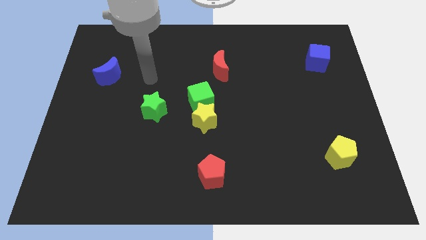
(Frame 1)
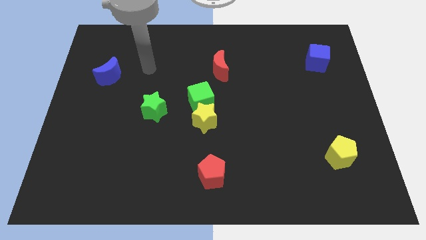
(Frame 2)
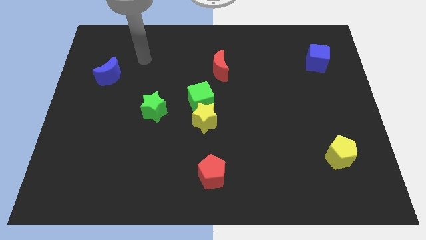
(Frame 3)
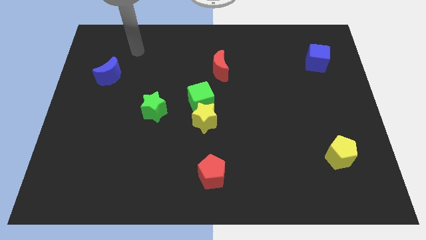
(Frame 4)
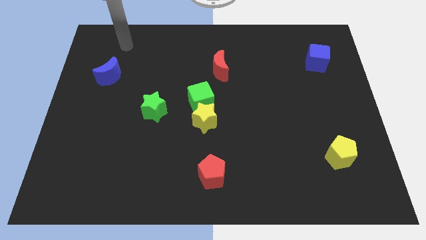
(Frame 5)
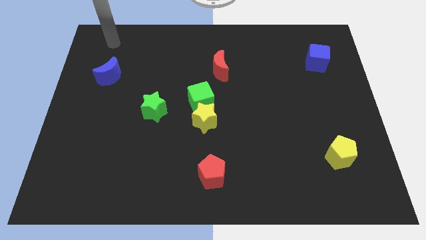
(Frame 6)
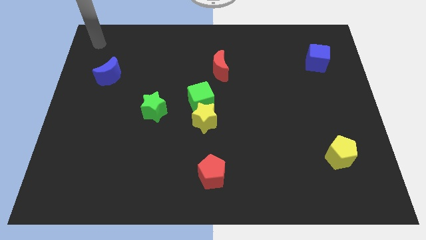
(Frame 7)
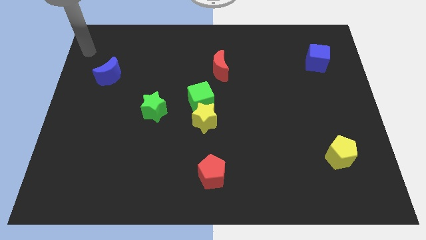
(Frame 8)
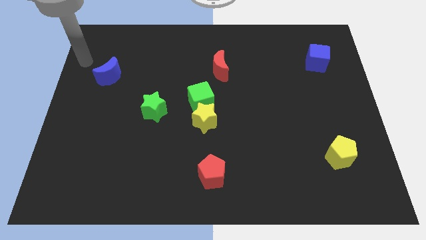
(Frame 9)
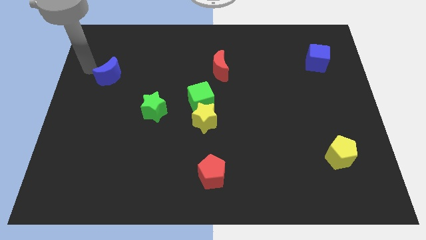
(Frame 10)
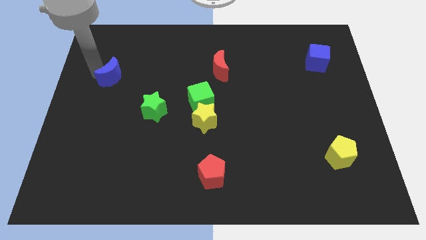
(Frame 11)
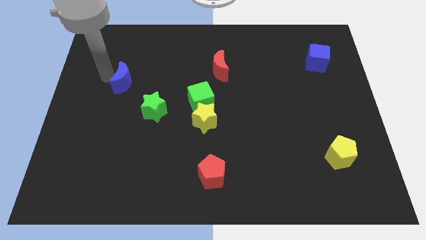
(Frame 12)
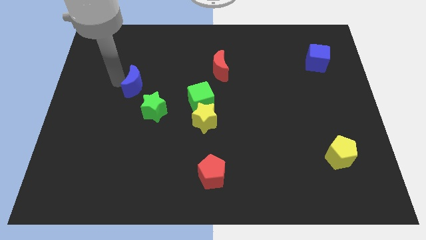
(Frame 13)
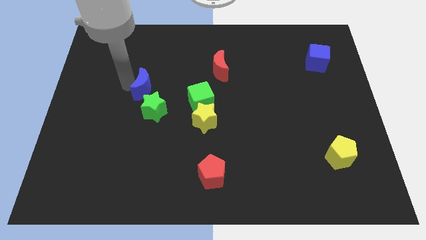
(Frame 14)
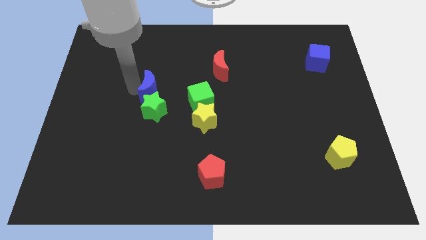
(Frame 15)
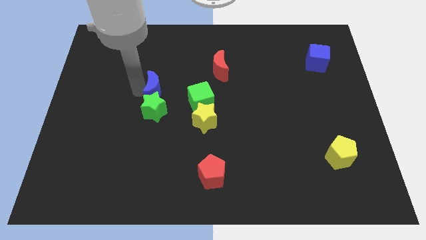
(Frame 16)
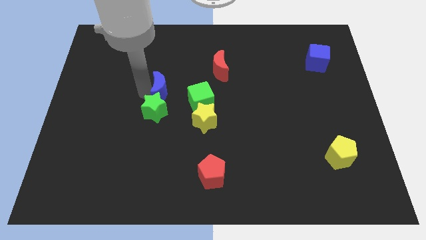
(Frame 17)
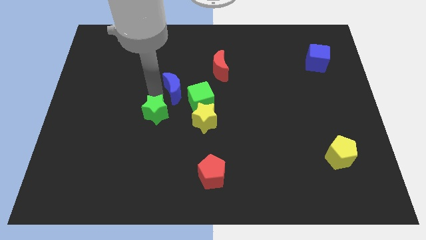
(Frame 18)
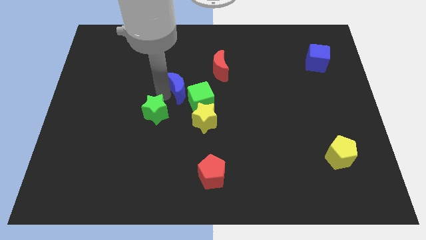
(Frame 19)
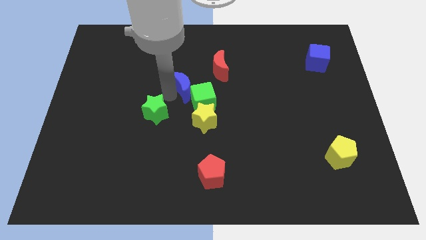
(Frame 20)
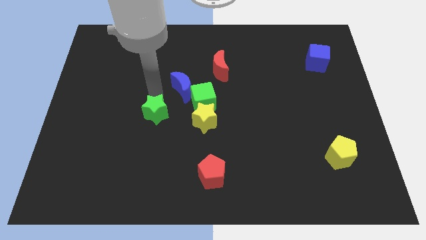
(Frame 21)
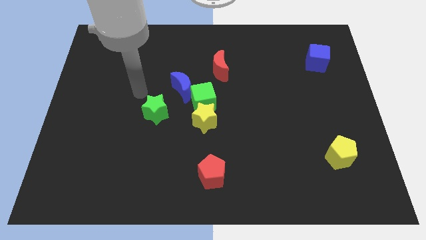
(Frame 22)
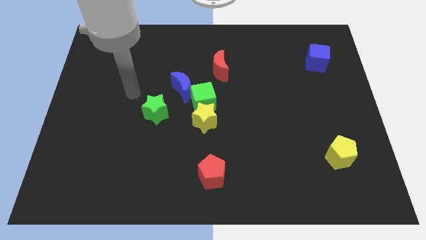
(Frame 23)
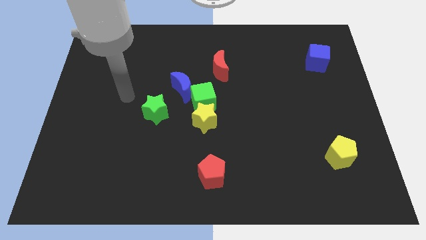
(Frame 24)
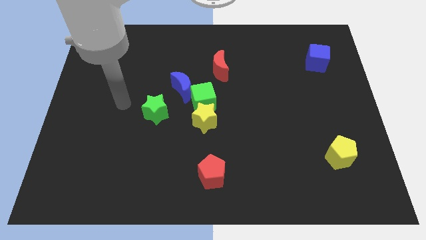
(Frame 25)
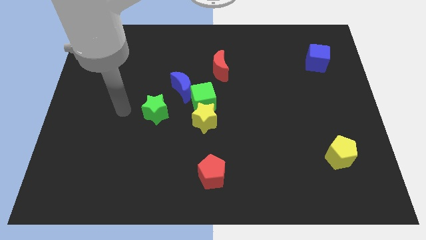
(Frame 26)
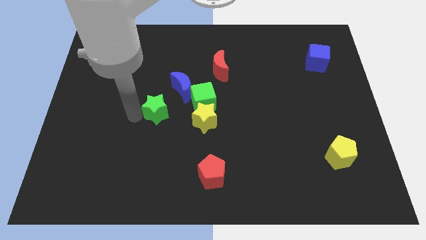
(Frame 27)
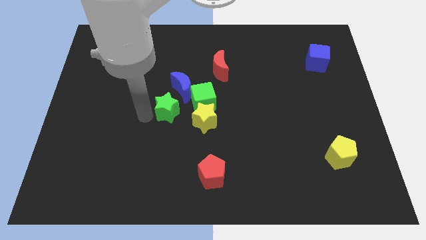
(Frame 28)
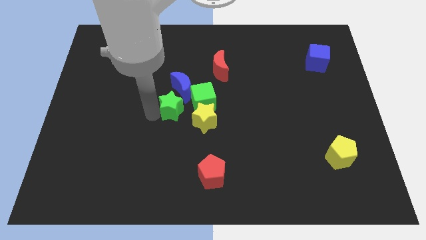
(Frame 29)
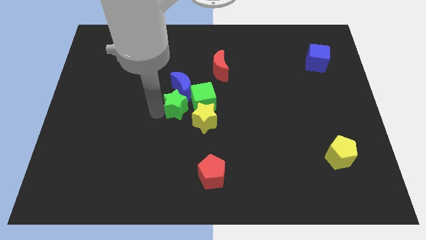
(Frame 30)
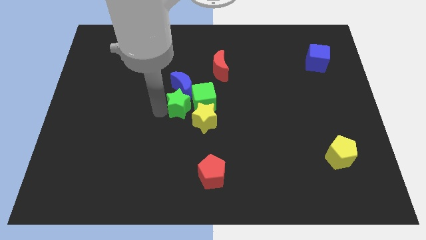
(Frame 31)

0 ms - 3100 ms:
slide the blue moon and green star into the green cube

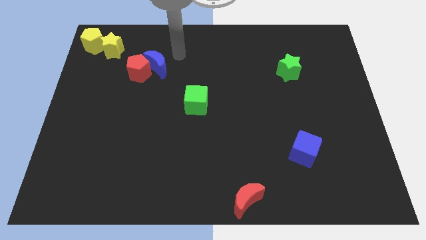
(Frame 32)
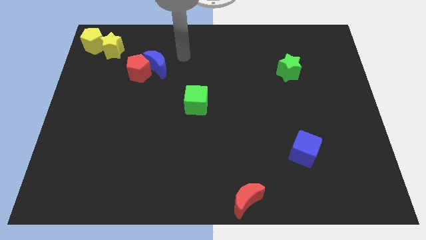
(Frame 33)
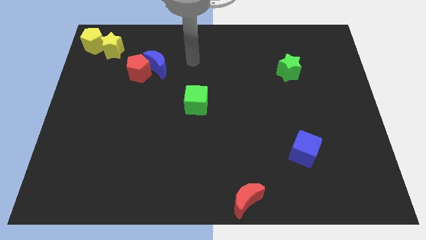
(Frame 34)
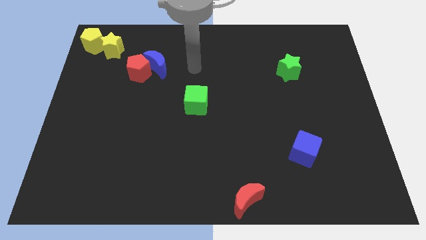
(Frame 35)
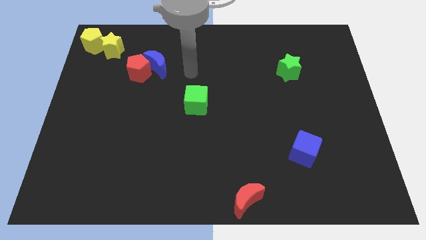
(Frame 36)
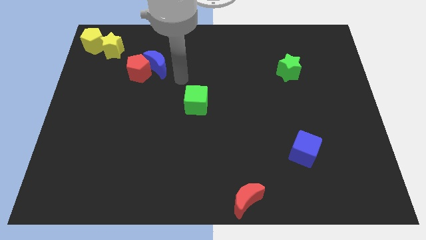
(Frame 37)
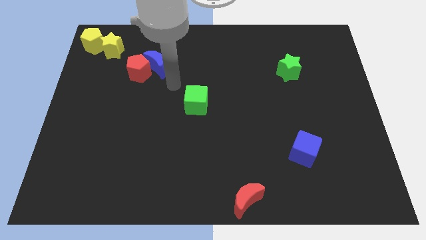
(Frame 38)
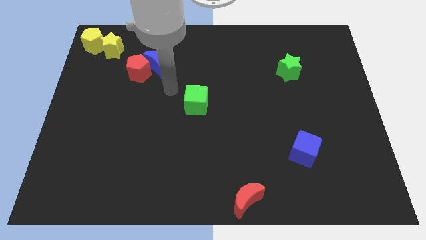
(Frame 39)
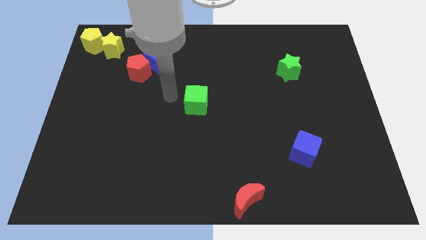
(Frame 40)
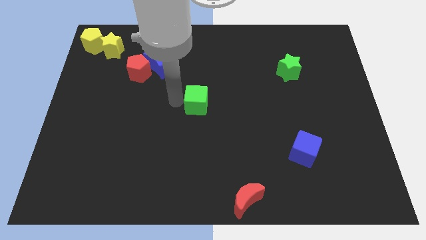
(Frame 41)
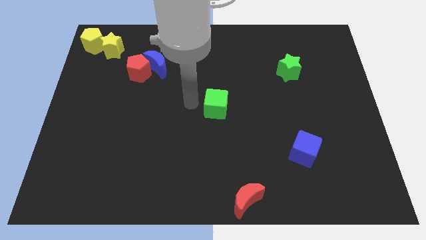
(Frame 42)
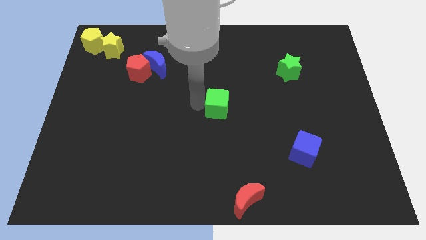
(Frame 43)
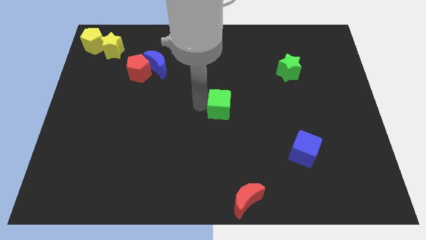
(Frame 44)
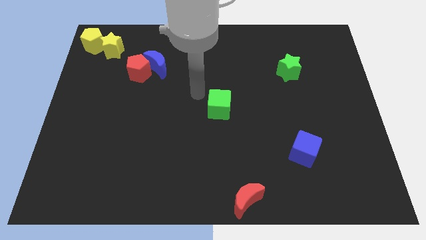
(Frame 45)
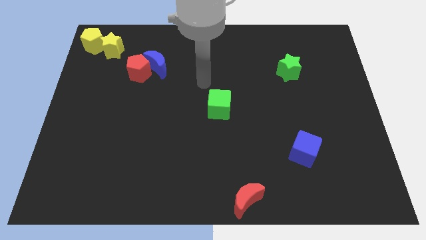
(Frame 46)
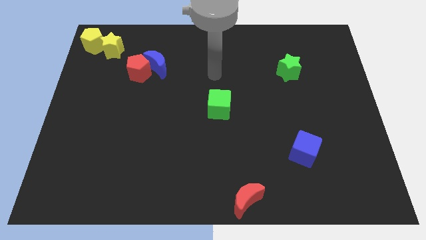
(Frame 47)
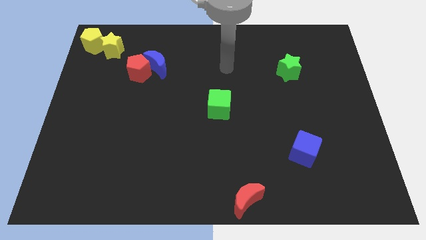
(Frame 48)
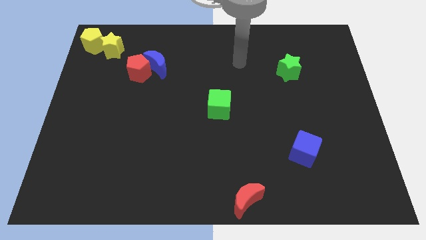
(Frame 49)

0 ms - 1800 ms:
place green cube at the center of the board

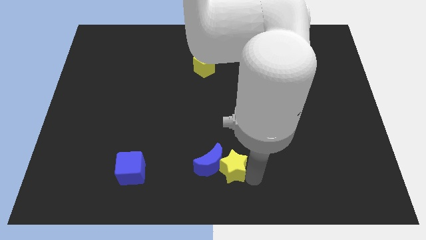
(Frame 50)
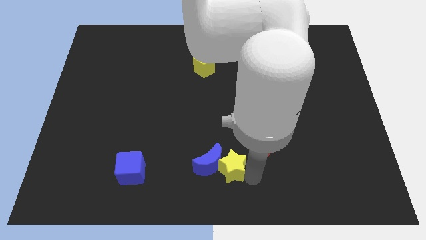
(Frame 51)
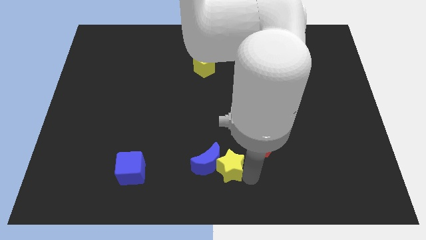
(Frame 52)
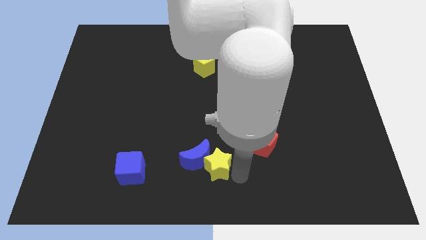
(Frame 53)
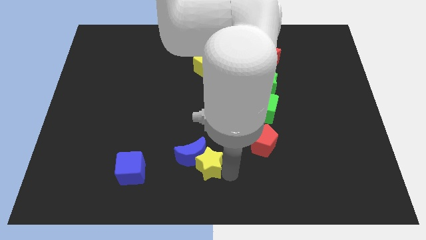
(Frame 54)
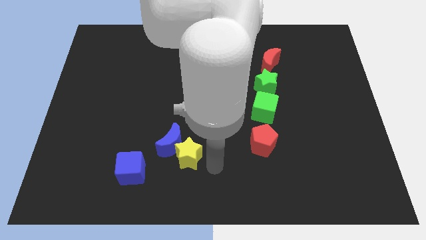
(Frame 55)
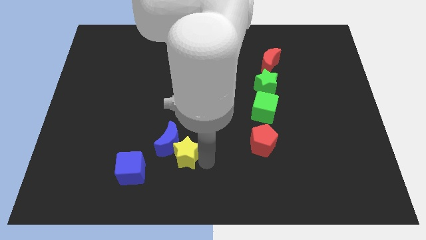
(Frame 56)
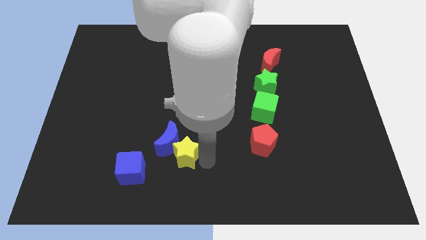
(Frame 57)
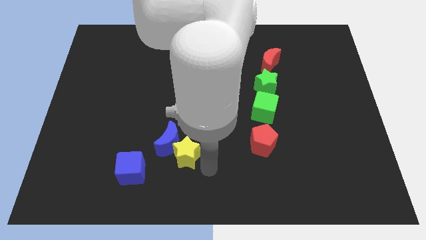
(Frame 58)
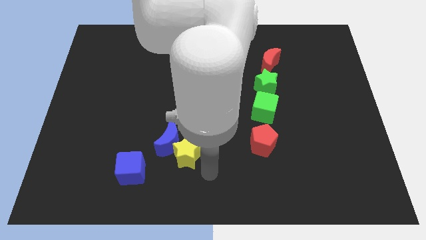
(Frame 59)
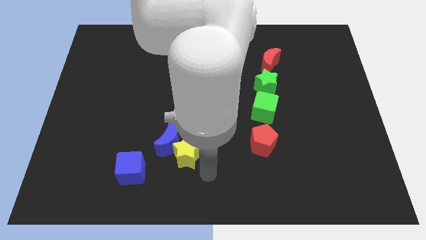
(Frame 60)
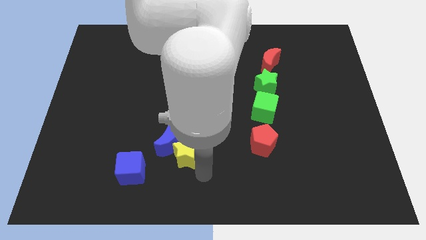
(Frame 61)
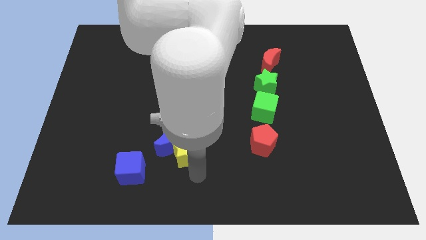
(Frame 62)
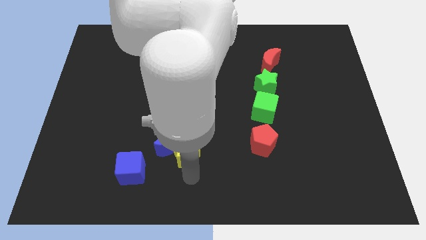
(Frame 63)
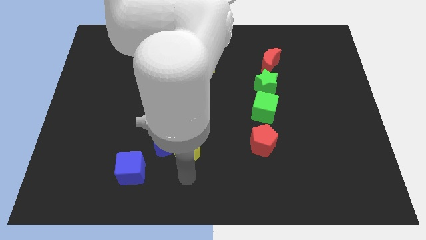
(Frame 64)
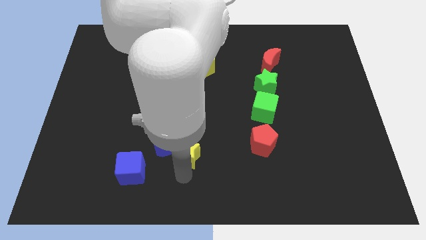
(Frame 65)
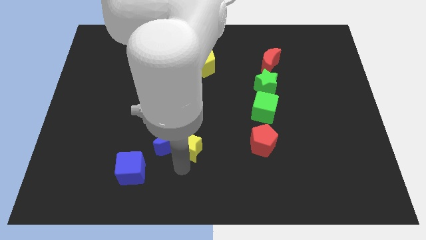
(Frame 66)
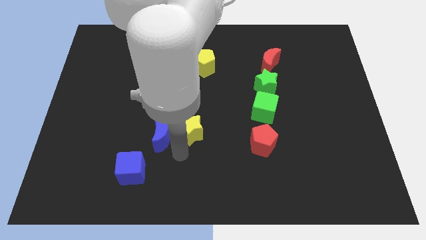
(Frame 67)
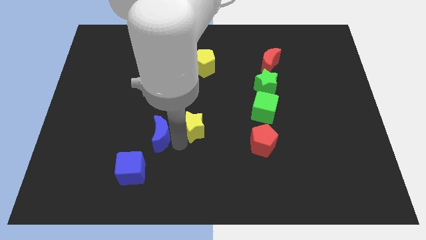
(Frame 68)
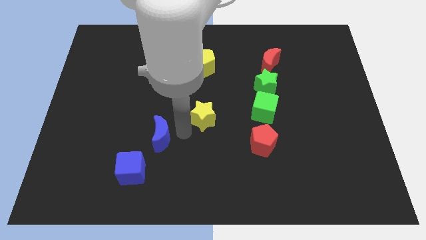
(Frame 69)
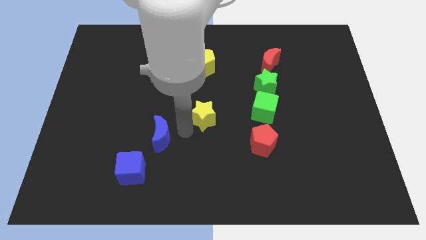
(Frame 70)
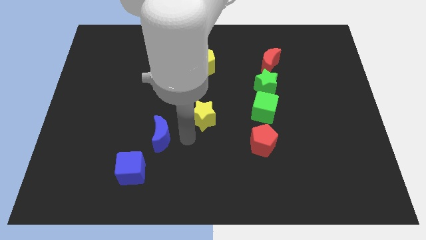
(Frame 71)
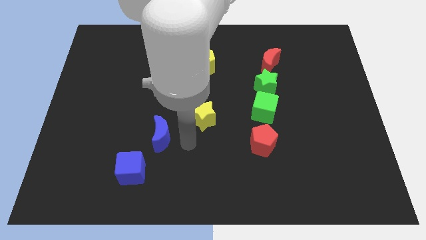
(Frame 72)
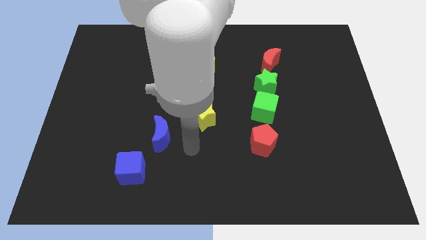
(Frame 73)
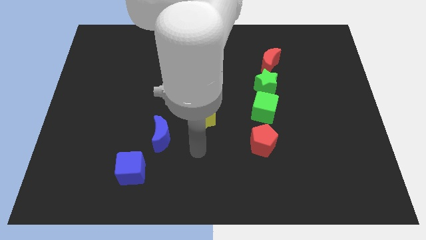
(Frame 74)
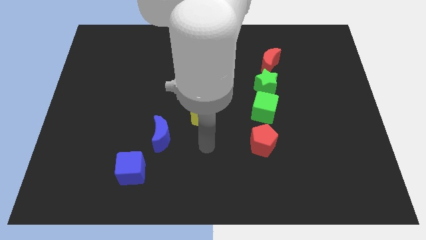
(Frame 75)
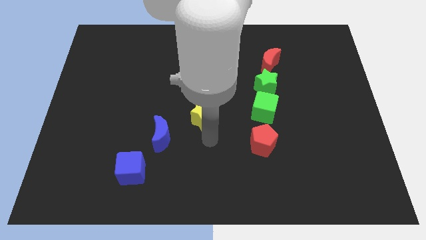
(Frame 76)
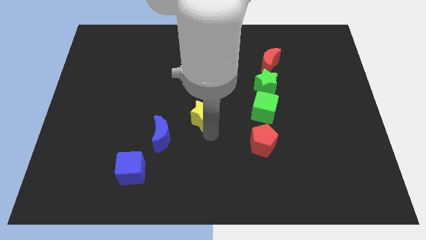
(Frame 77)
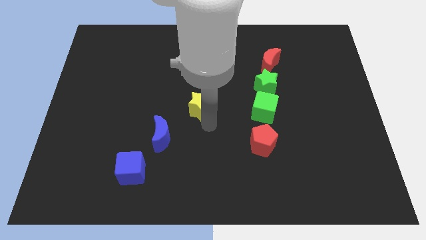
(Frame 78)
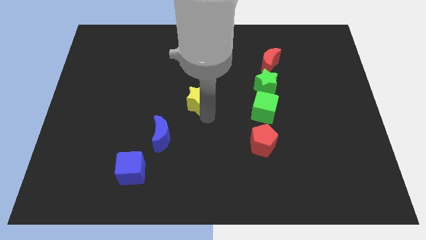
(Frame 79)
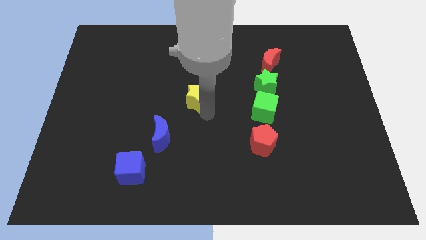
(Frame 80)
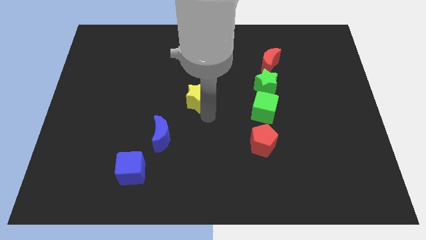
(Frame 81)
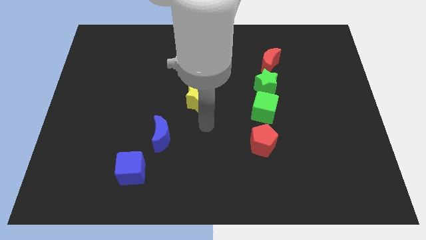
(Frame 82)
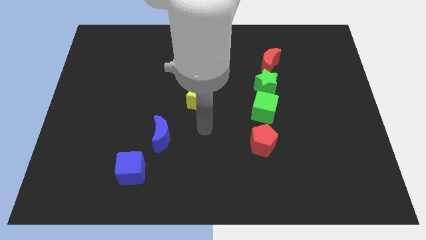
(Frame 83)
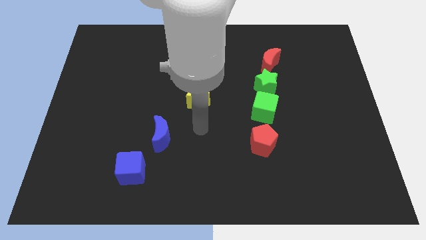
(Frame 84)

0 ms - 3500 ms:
separate the blue moon and the yellow star

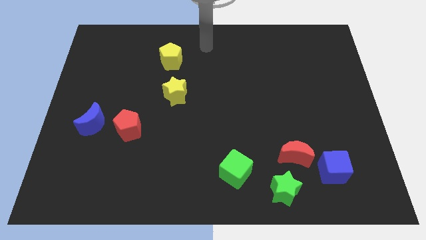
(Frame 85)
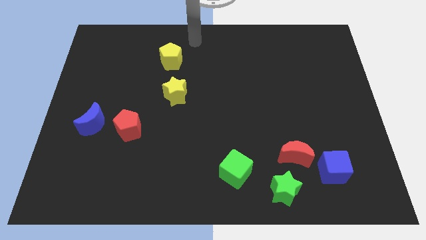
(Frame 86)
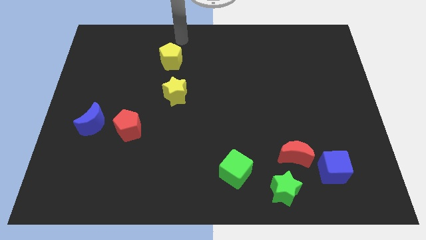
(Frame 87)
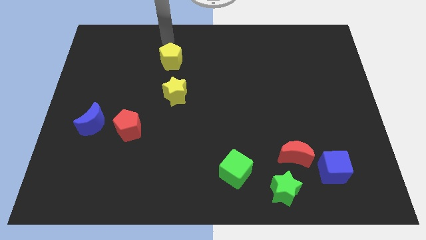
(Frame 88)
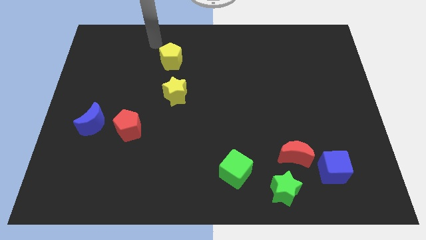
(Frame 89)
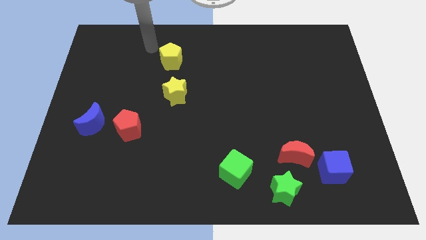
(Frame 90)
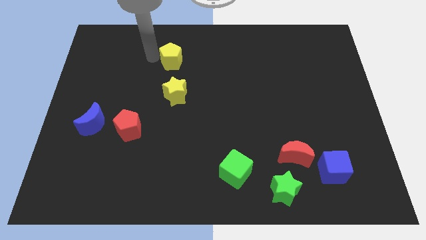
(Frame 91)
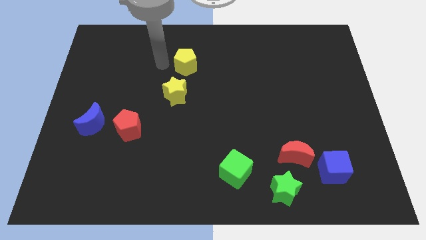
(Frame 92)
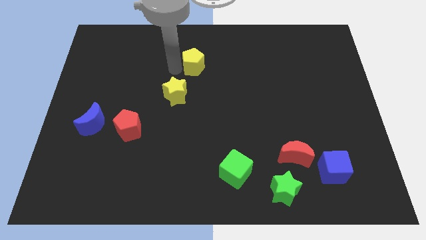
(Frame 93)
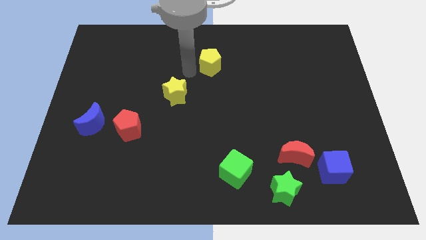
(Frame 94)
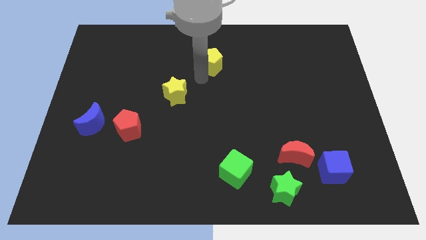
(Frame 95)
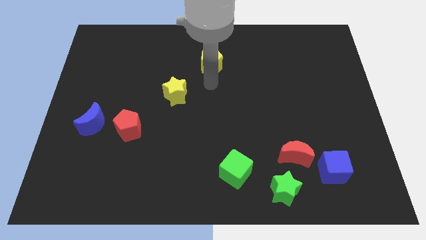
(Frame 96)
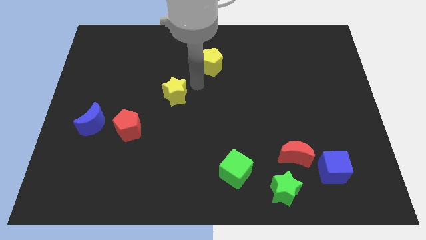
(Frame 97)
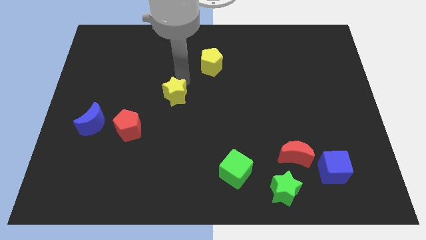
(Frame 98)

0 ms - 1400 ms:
place the yellow pentagon diagonally to the yellow star
